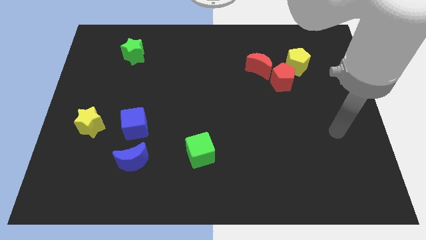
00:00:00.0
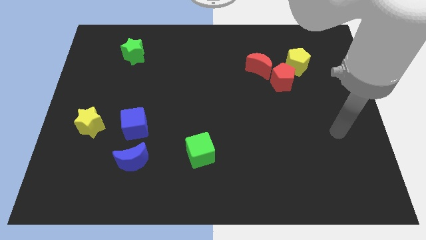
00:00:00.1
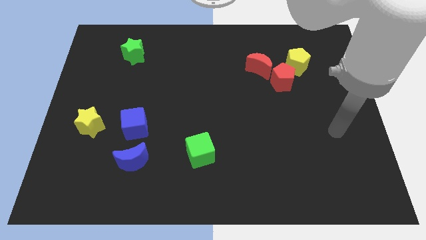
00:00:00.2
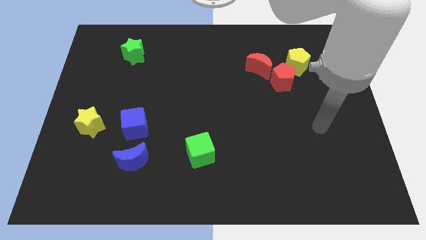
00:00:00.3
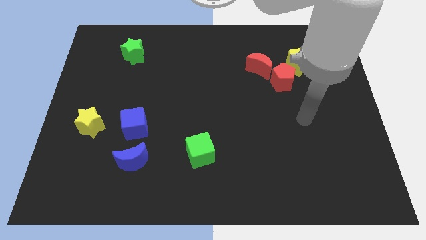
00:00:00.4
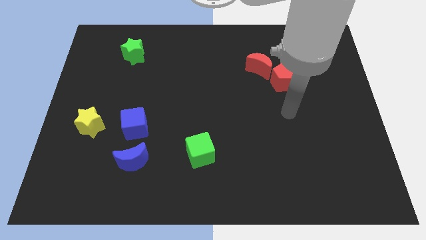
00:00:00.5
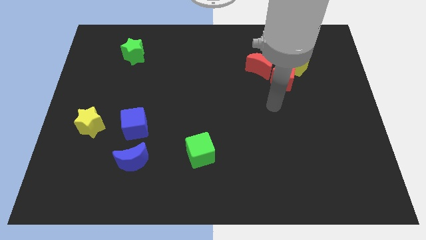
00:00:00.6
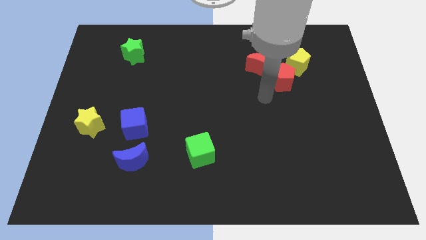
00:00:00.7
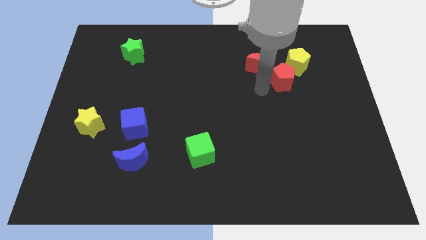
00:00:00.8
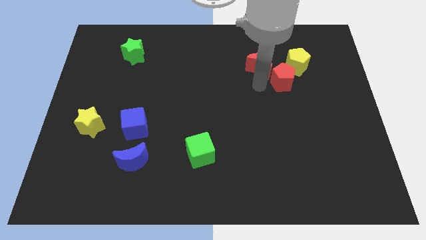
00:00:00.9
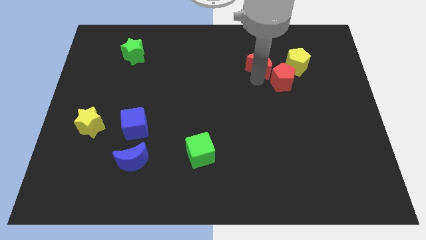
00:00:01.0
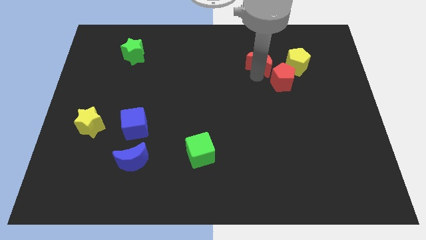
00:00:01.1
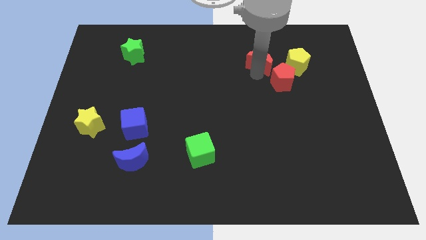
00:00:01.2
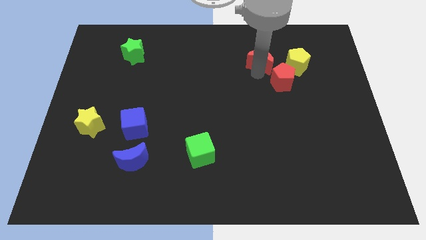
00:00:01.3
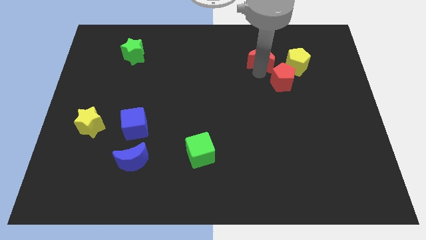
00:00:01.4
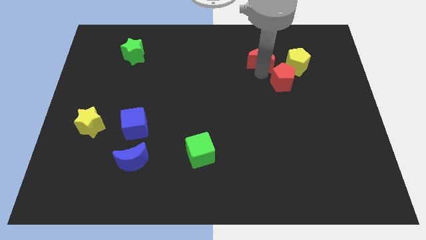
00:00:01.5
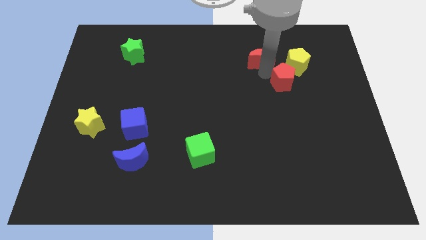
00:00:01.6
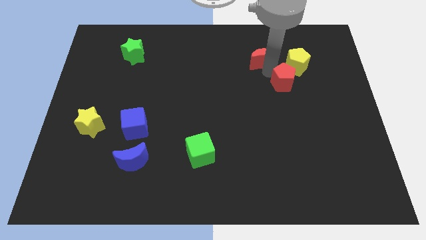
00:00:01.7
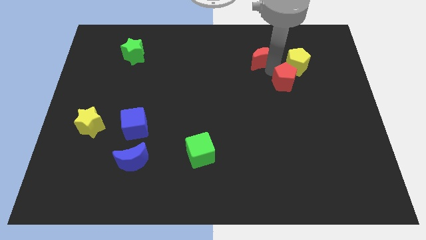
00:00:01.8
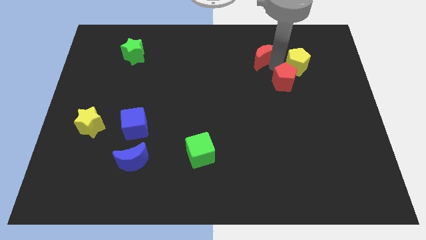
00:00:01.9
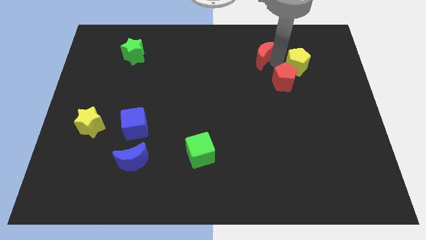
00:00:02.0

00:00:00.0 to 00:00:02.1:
separate the red crescent from the red pentagon

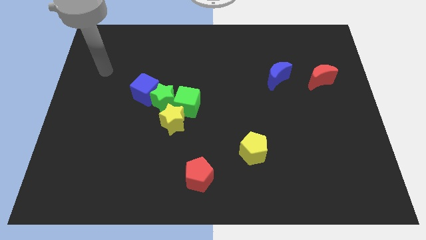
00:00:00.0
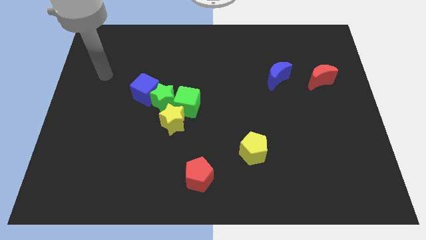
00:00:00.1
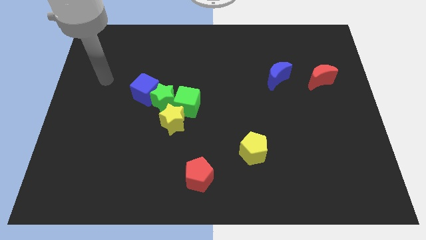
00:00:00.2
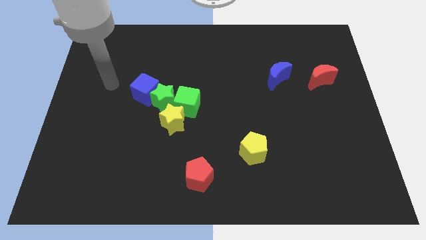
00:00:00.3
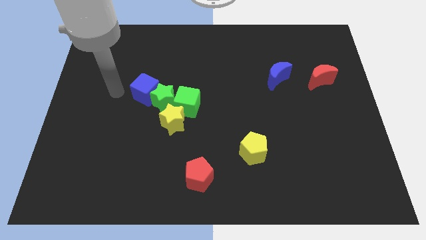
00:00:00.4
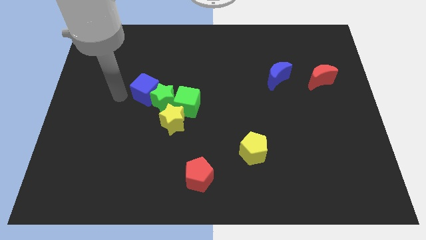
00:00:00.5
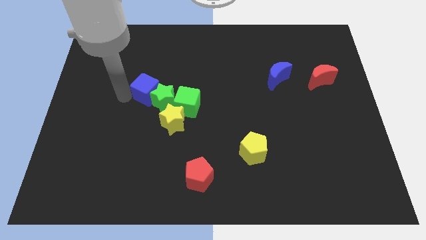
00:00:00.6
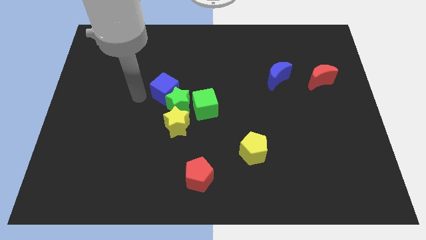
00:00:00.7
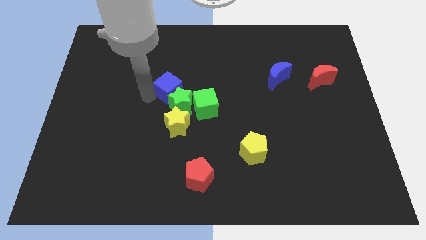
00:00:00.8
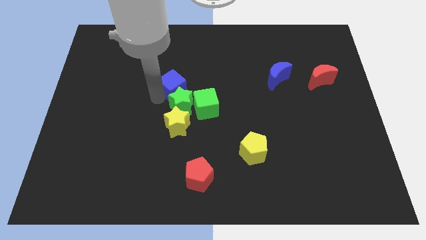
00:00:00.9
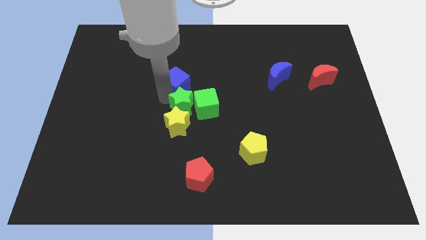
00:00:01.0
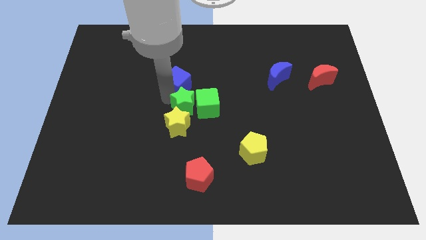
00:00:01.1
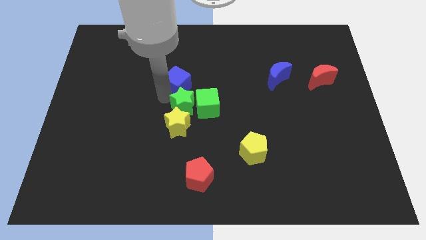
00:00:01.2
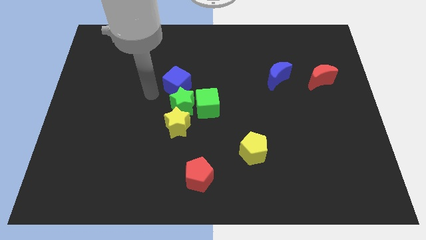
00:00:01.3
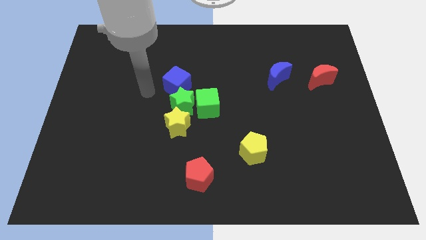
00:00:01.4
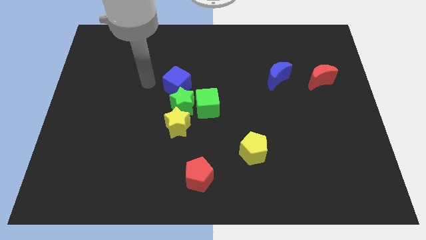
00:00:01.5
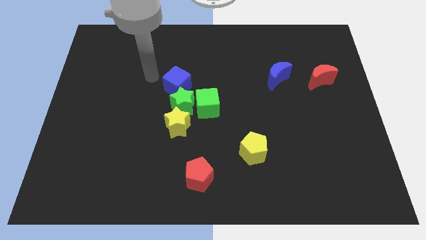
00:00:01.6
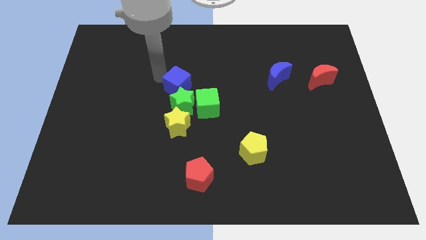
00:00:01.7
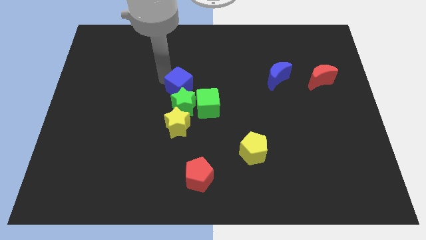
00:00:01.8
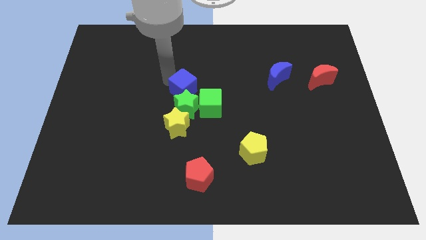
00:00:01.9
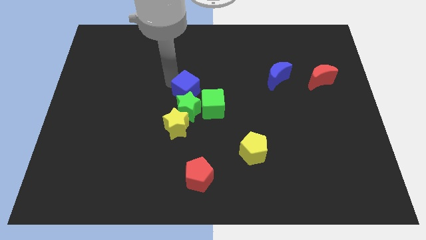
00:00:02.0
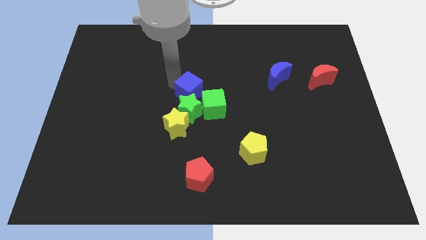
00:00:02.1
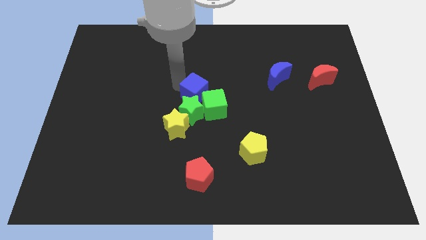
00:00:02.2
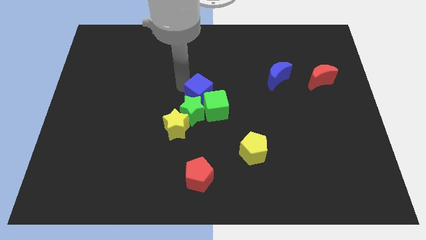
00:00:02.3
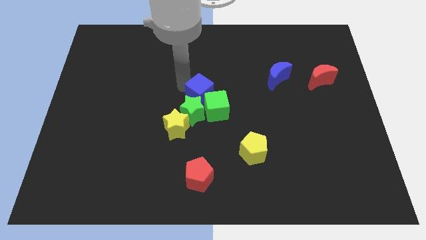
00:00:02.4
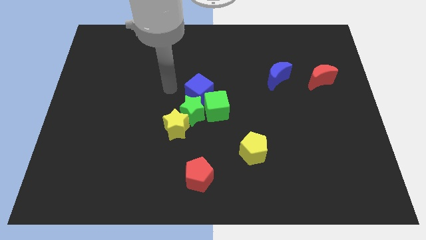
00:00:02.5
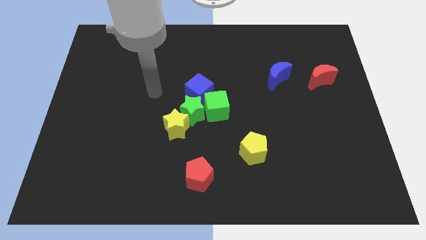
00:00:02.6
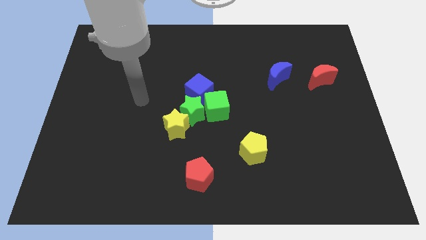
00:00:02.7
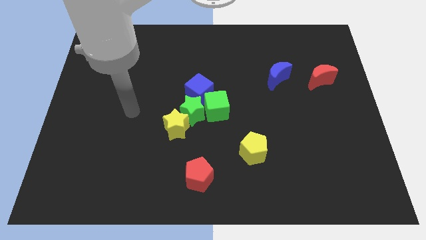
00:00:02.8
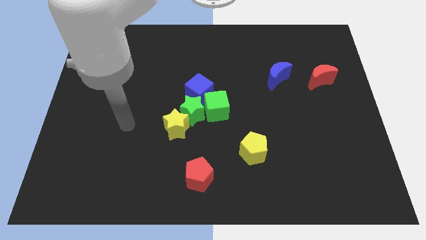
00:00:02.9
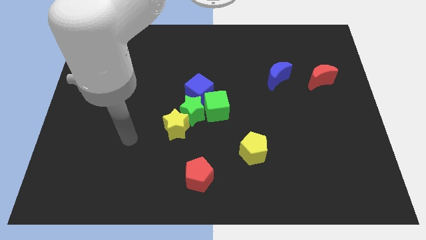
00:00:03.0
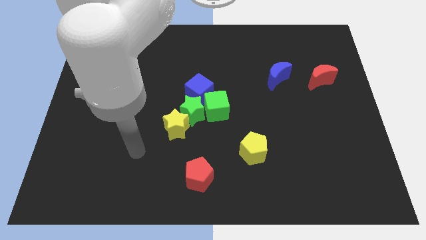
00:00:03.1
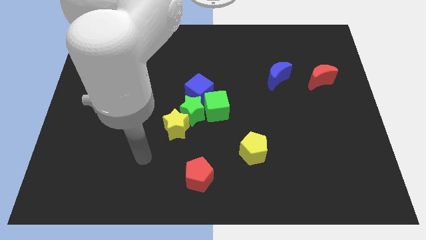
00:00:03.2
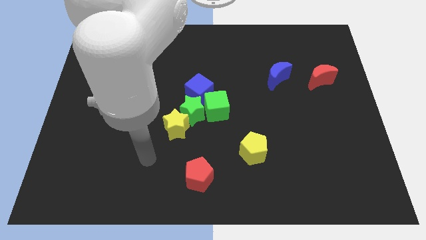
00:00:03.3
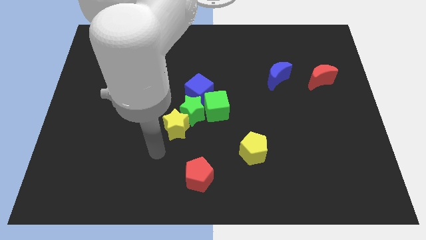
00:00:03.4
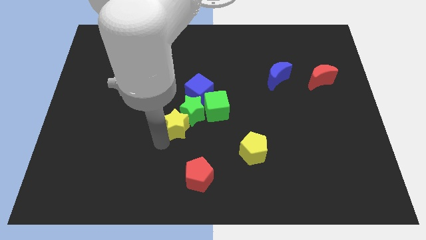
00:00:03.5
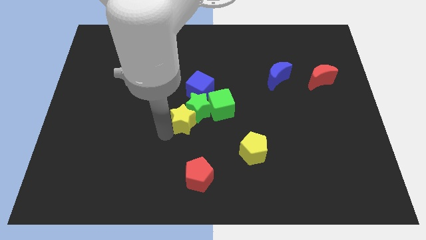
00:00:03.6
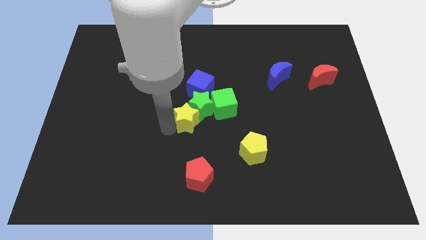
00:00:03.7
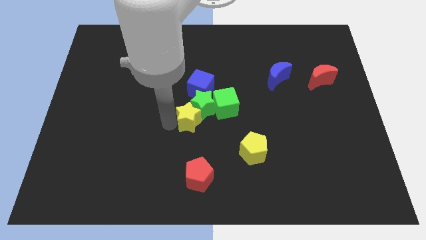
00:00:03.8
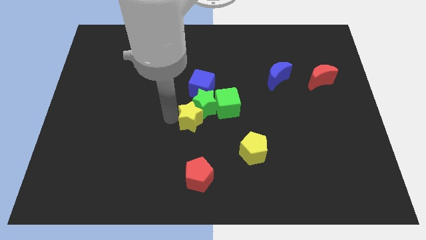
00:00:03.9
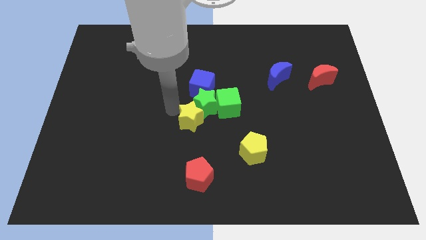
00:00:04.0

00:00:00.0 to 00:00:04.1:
push the blue cube into the green star

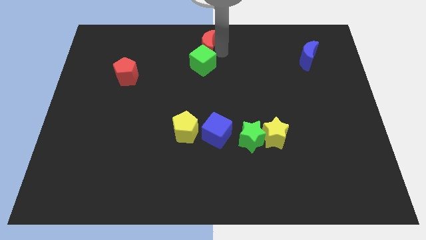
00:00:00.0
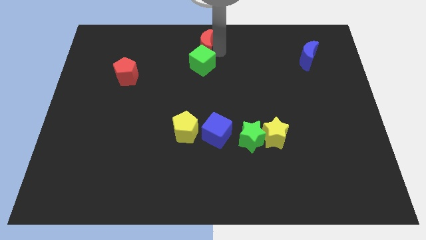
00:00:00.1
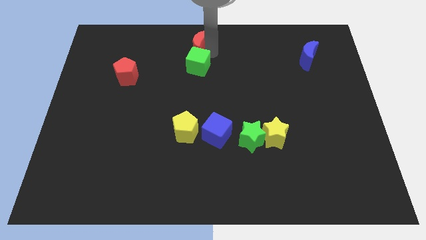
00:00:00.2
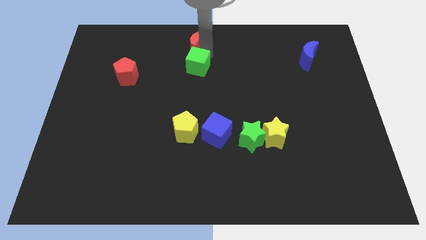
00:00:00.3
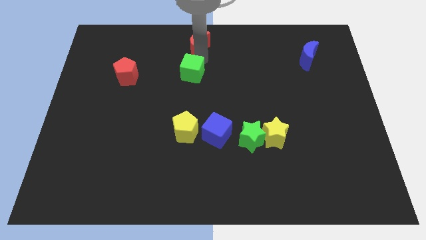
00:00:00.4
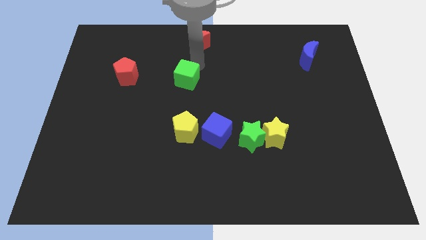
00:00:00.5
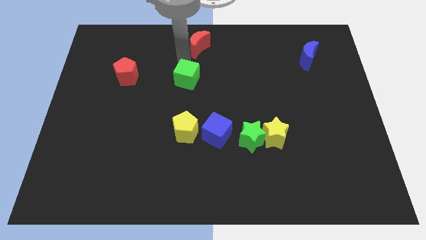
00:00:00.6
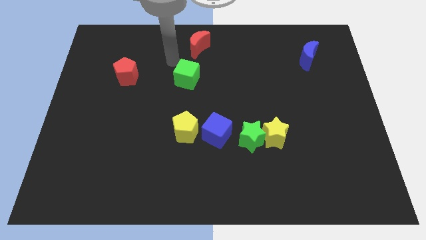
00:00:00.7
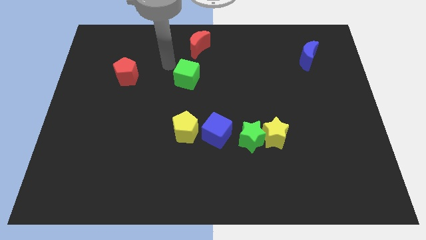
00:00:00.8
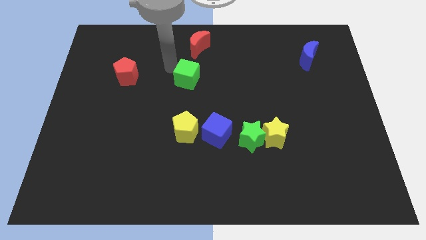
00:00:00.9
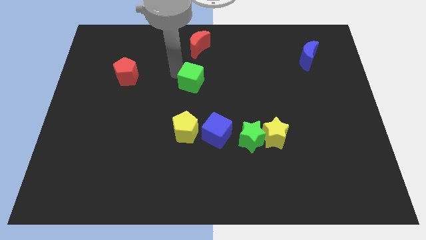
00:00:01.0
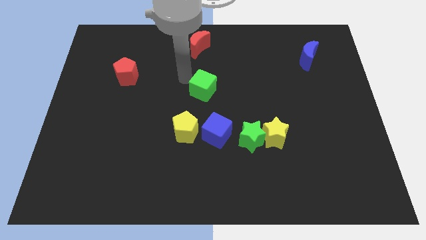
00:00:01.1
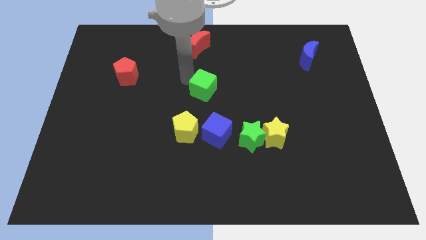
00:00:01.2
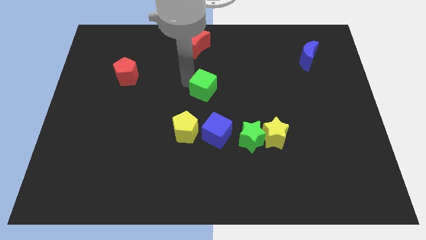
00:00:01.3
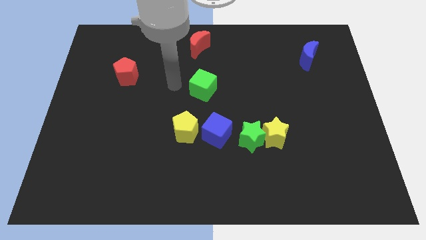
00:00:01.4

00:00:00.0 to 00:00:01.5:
separate the green cube and the red moon

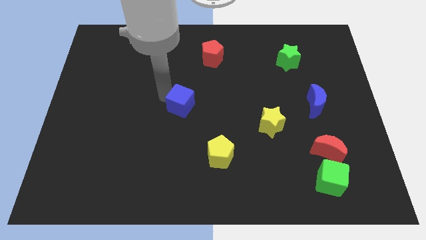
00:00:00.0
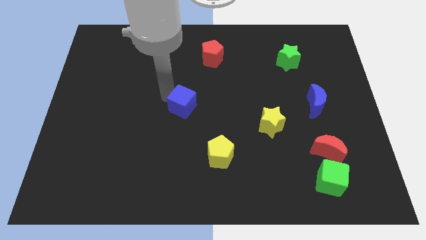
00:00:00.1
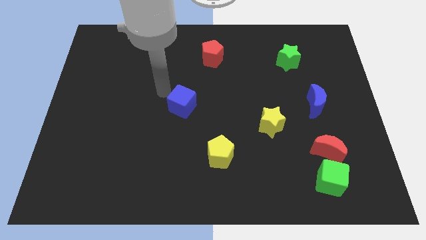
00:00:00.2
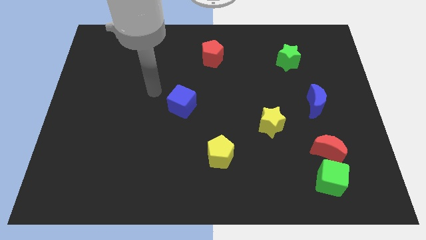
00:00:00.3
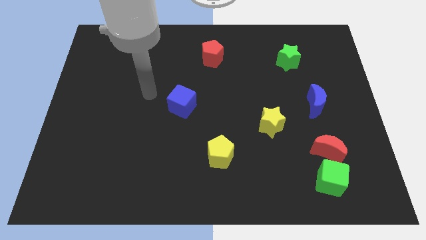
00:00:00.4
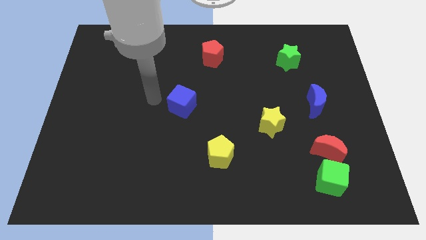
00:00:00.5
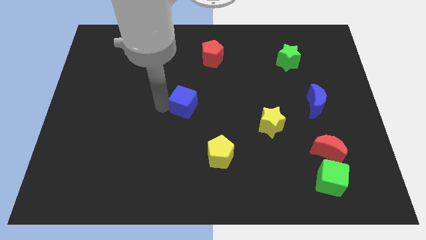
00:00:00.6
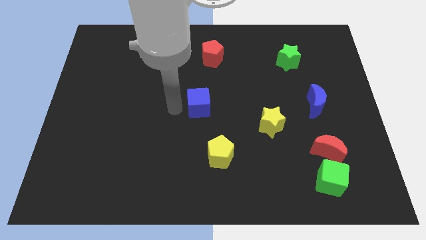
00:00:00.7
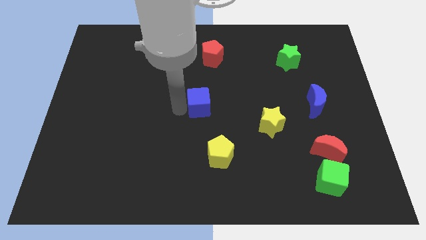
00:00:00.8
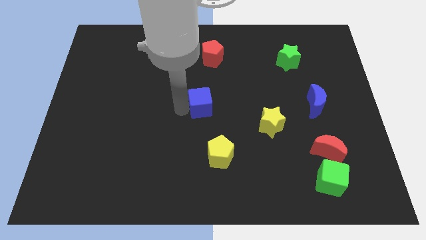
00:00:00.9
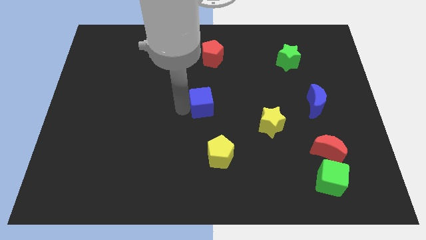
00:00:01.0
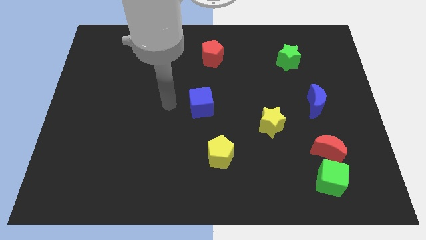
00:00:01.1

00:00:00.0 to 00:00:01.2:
move the blue cube to the right
